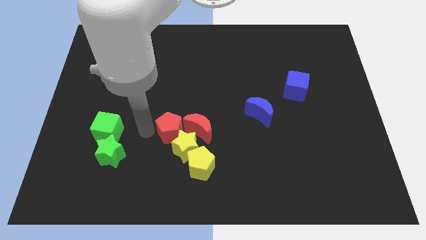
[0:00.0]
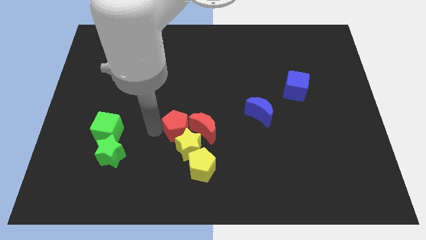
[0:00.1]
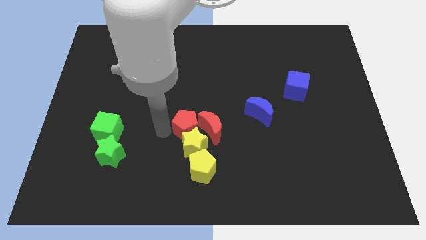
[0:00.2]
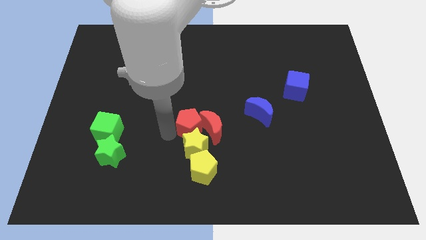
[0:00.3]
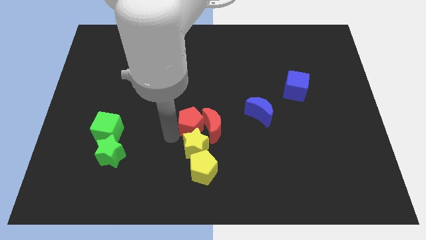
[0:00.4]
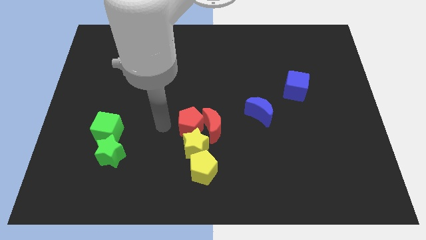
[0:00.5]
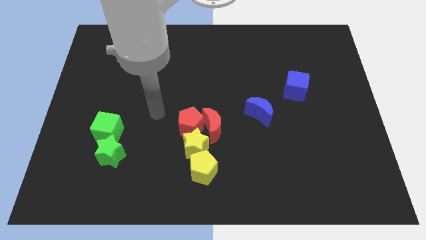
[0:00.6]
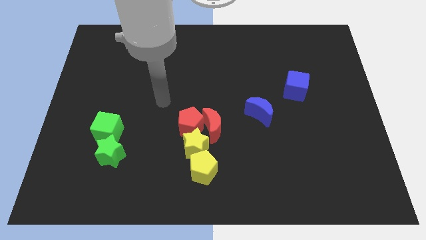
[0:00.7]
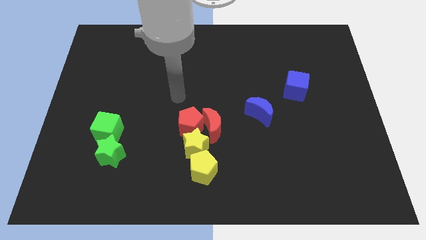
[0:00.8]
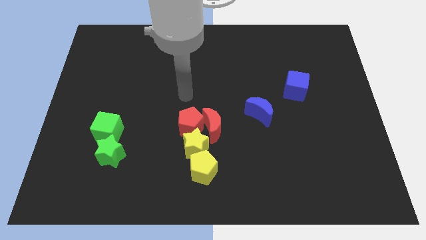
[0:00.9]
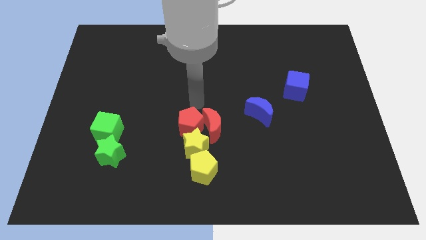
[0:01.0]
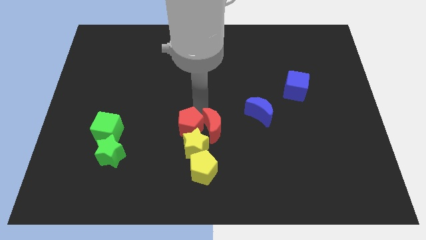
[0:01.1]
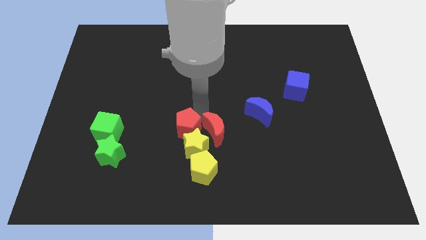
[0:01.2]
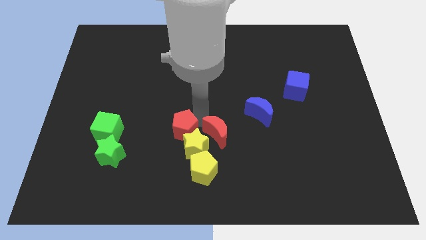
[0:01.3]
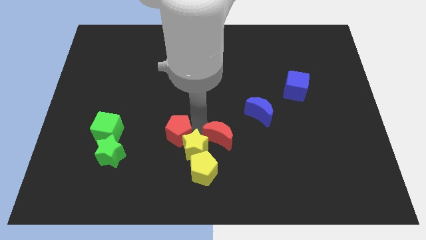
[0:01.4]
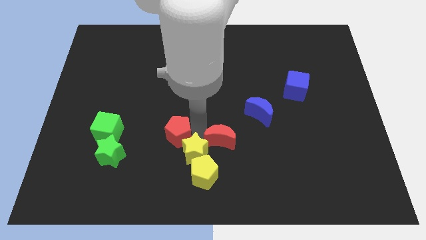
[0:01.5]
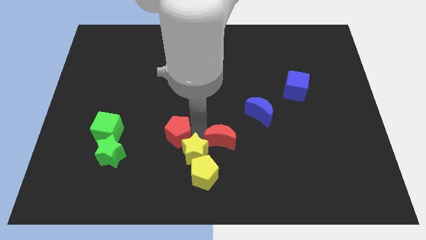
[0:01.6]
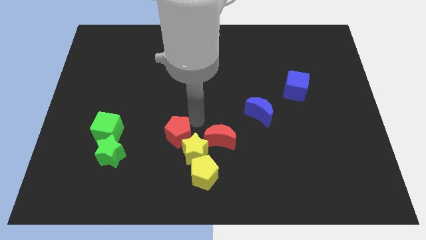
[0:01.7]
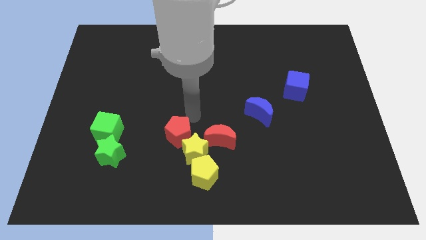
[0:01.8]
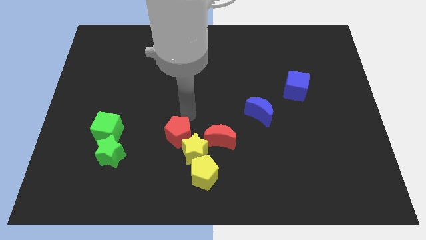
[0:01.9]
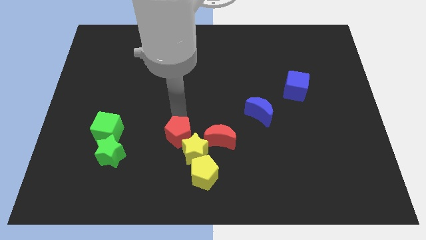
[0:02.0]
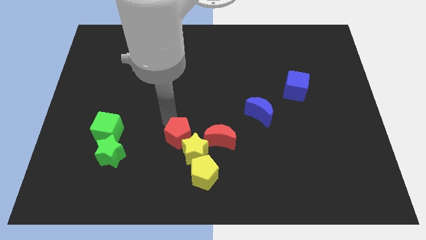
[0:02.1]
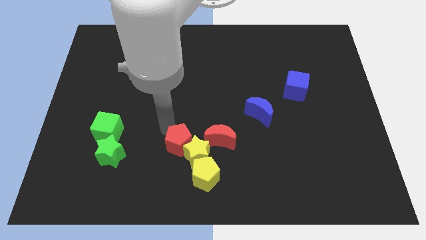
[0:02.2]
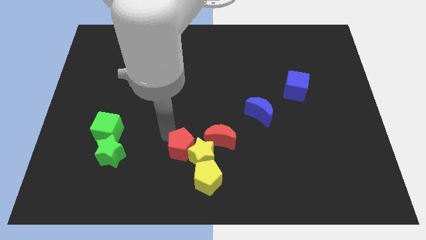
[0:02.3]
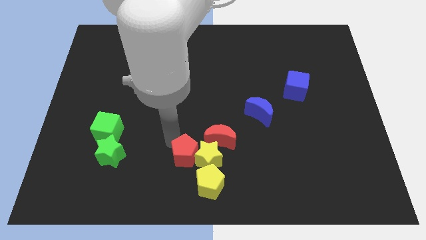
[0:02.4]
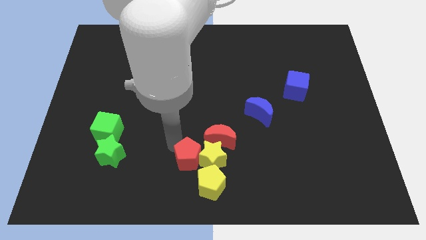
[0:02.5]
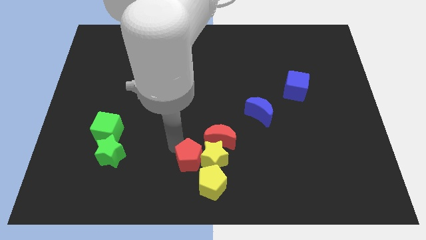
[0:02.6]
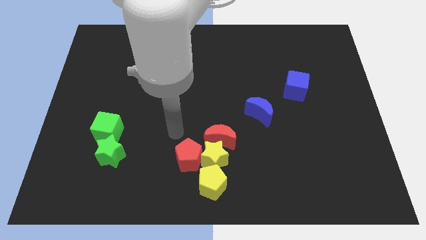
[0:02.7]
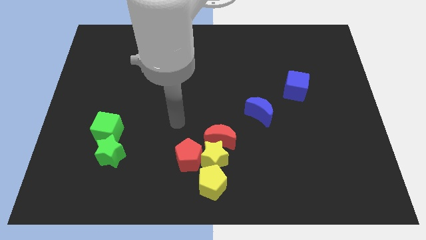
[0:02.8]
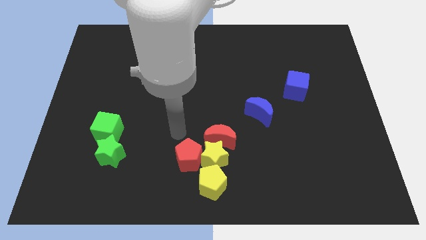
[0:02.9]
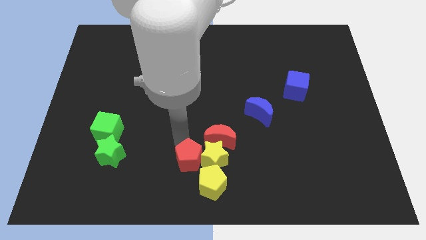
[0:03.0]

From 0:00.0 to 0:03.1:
push the red pentagon into the yellow star

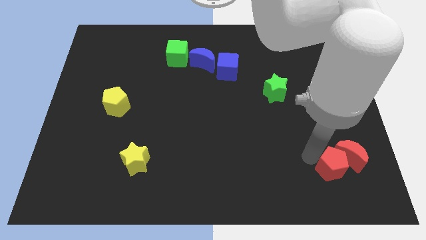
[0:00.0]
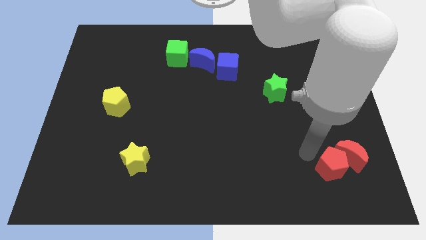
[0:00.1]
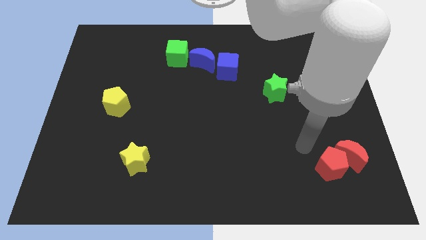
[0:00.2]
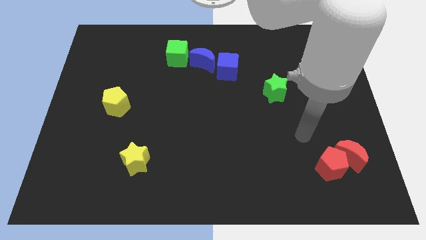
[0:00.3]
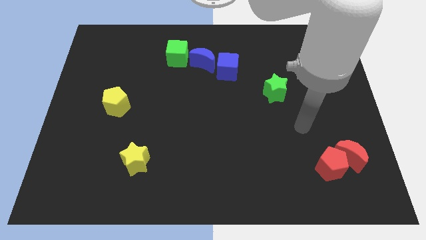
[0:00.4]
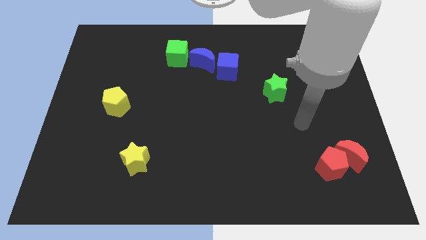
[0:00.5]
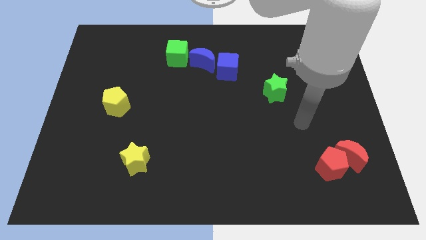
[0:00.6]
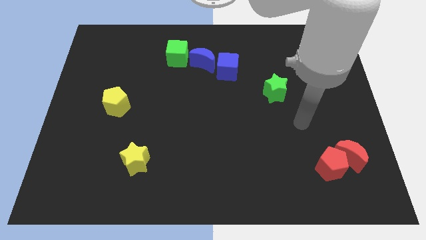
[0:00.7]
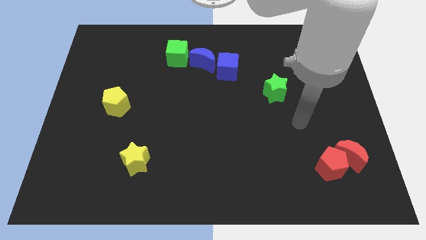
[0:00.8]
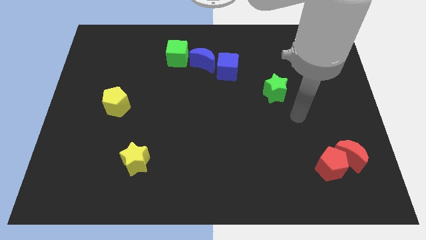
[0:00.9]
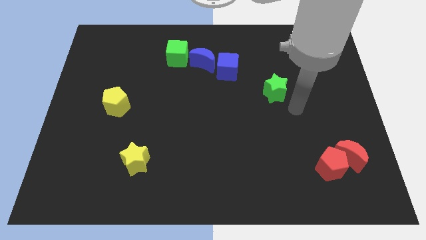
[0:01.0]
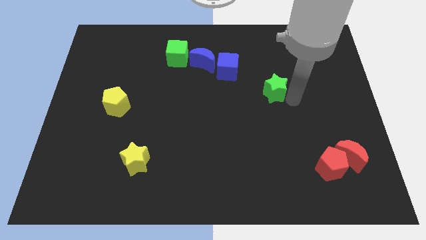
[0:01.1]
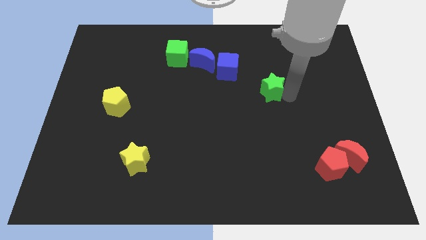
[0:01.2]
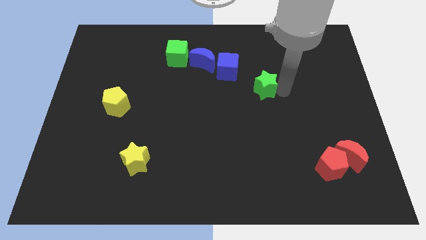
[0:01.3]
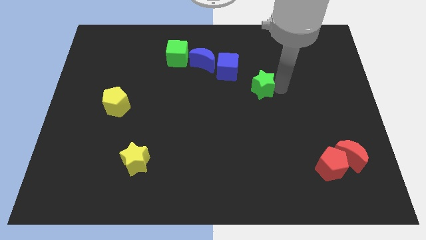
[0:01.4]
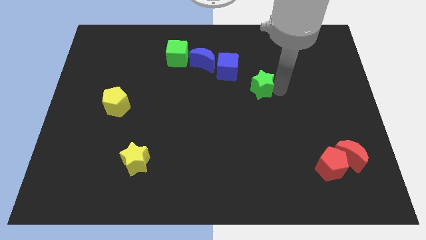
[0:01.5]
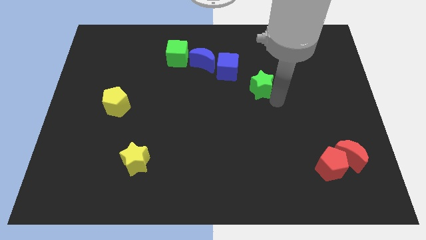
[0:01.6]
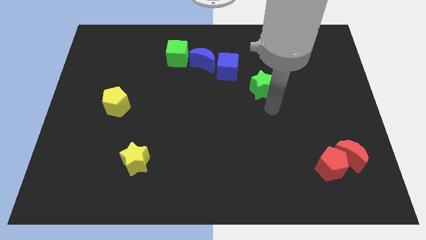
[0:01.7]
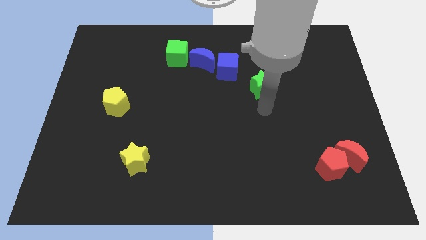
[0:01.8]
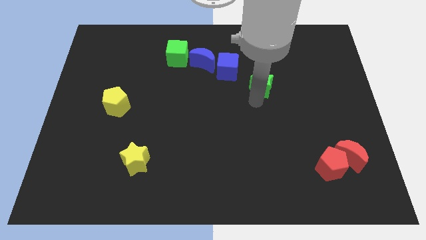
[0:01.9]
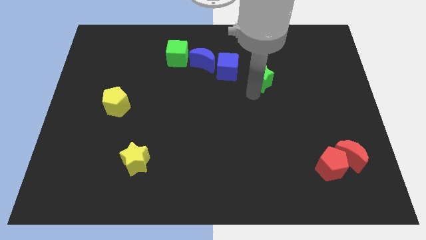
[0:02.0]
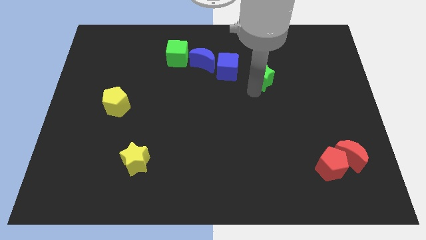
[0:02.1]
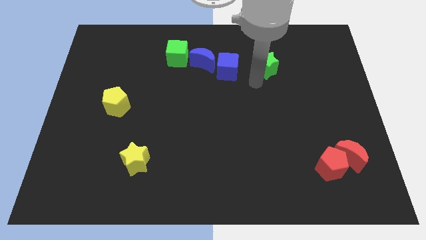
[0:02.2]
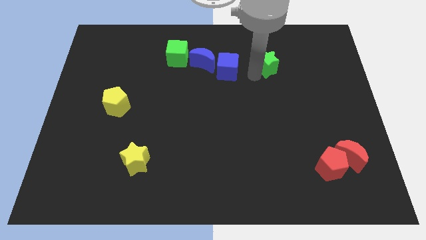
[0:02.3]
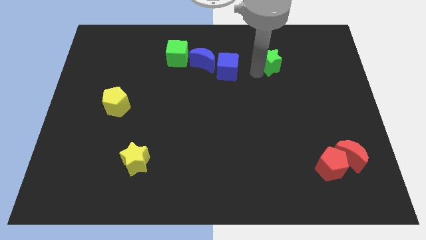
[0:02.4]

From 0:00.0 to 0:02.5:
move the green star towards the top side of the board

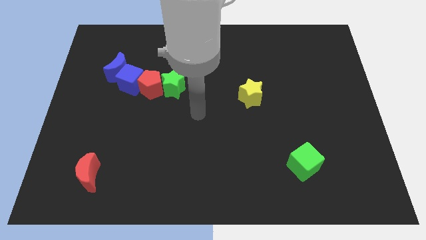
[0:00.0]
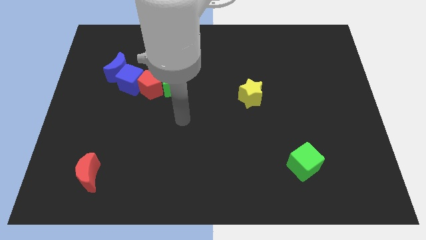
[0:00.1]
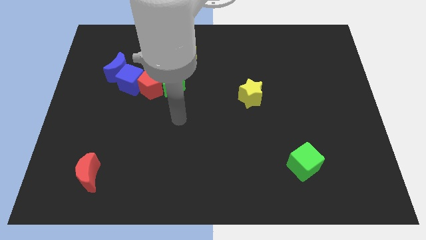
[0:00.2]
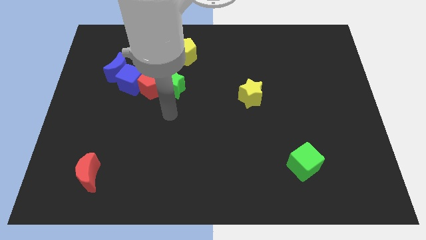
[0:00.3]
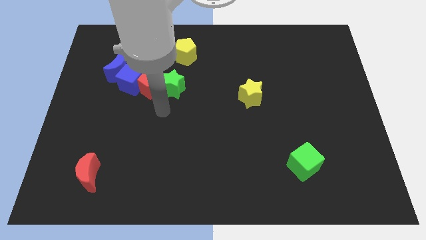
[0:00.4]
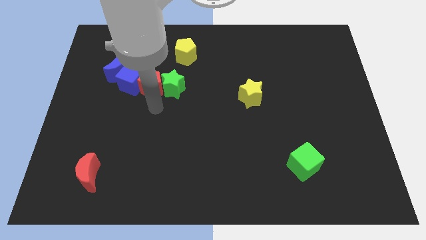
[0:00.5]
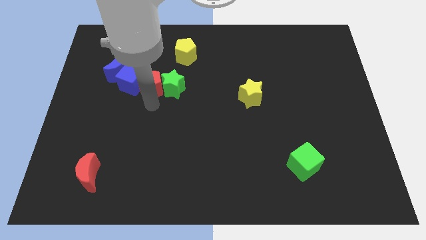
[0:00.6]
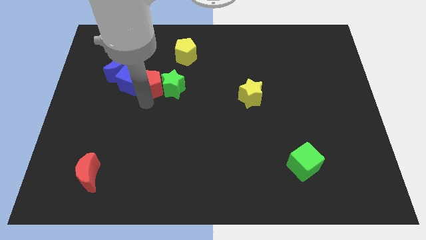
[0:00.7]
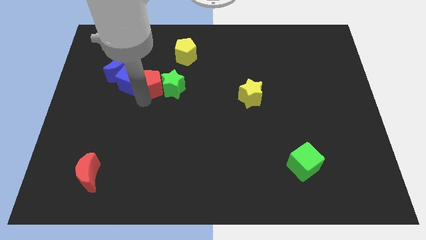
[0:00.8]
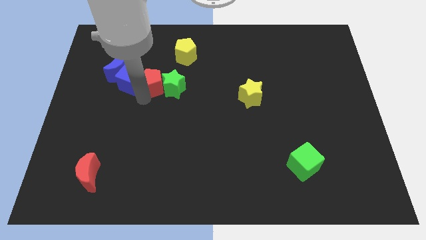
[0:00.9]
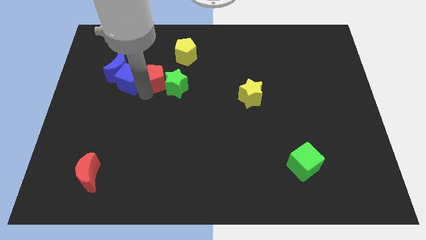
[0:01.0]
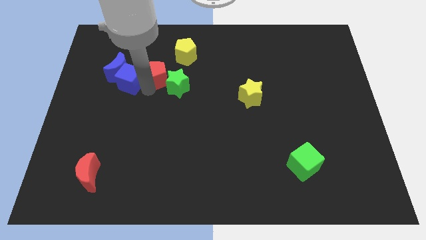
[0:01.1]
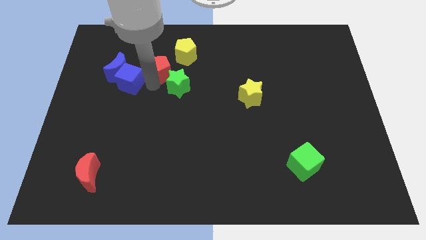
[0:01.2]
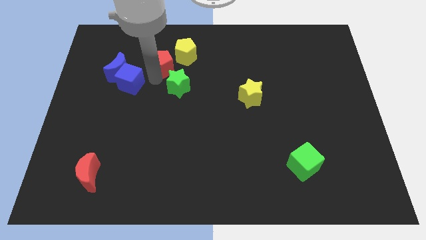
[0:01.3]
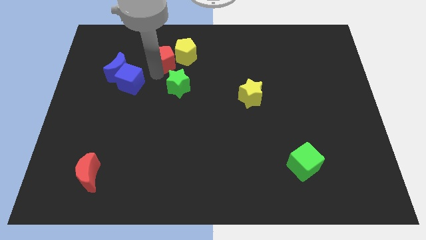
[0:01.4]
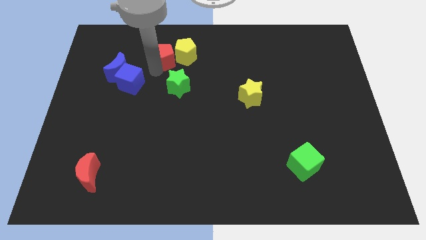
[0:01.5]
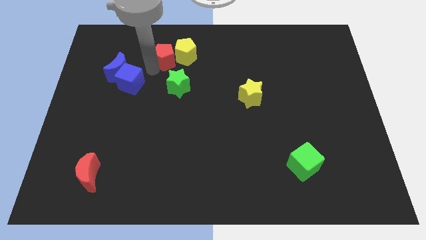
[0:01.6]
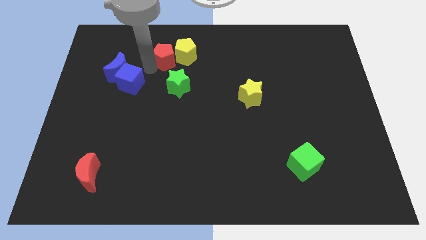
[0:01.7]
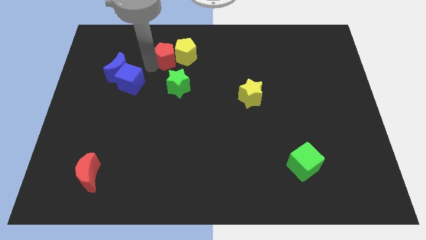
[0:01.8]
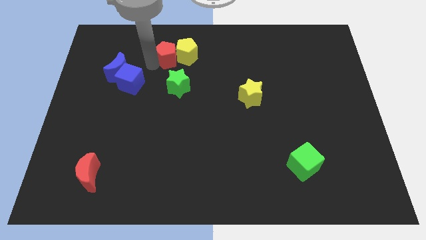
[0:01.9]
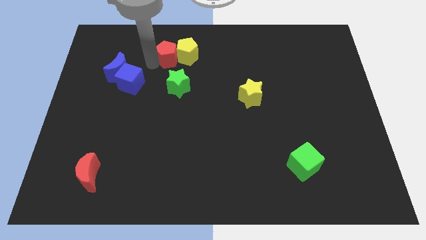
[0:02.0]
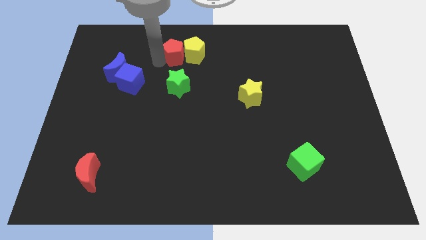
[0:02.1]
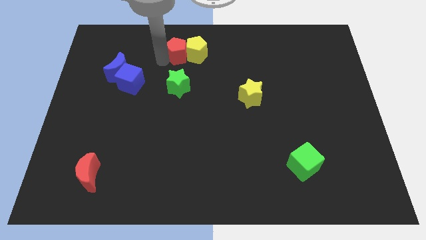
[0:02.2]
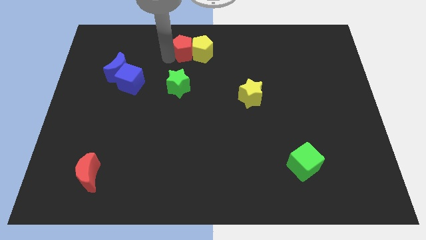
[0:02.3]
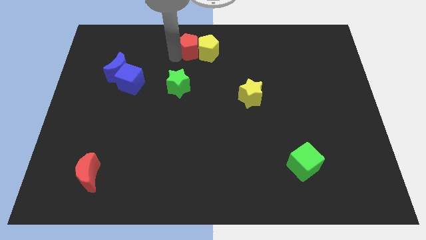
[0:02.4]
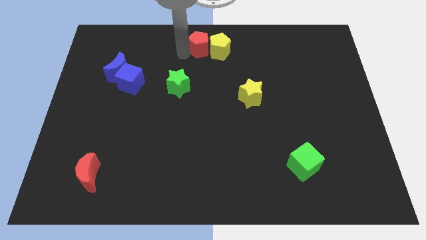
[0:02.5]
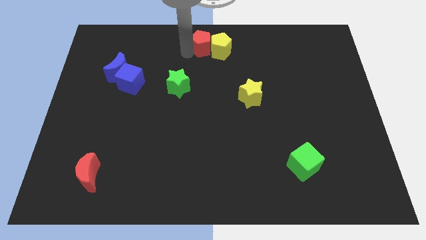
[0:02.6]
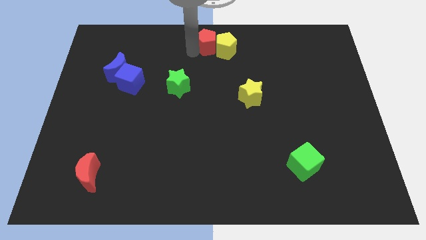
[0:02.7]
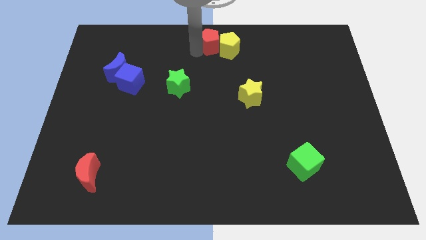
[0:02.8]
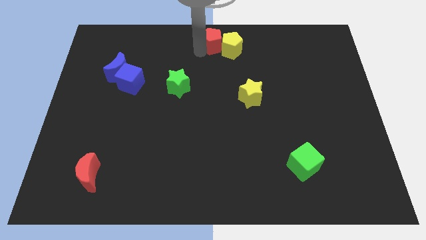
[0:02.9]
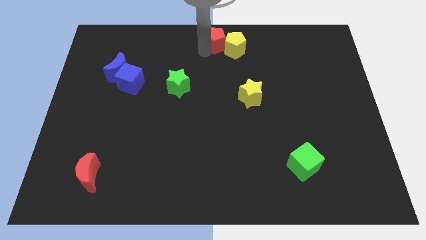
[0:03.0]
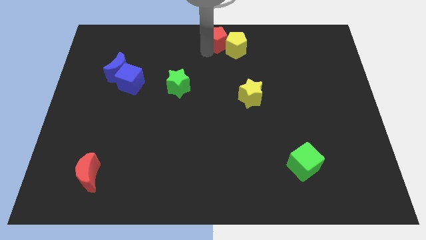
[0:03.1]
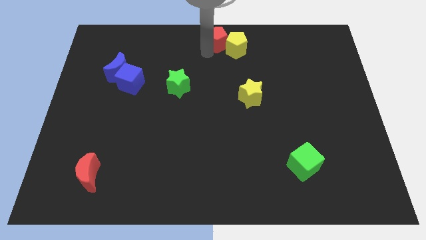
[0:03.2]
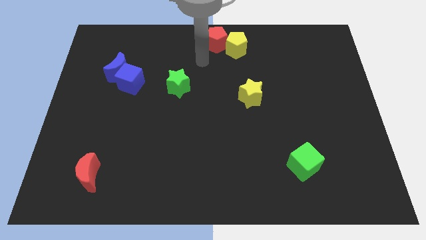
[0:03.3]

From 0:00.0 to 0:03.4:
put the yellow pentagon with the red pentagon towards the top center of the board
